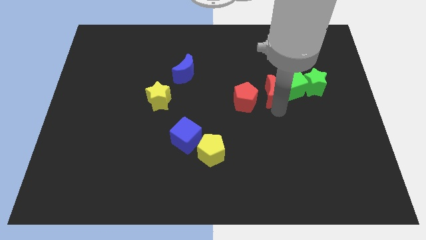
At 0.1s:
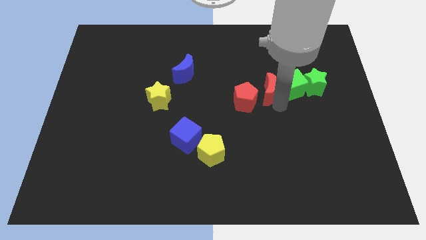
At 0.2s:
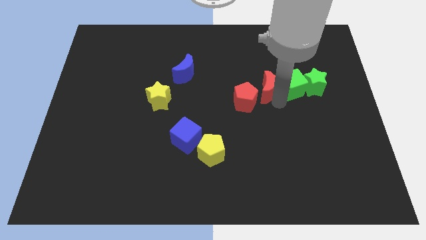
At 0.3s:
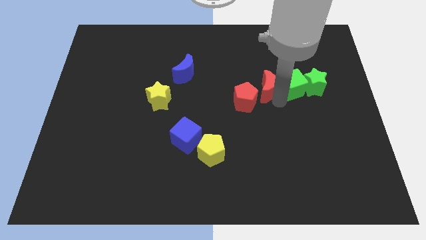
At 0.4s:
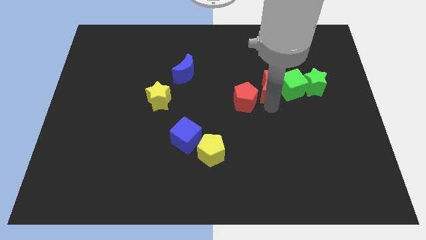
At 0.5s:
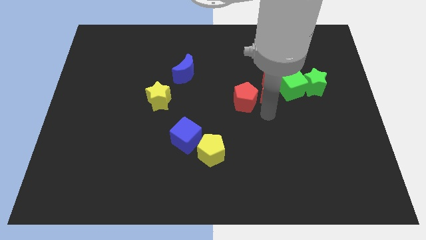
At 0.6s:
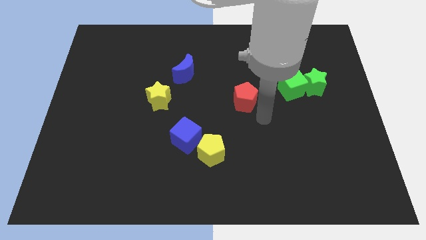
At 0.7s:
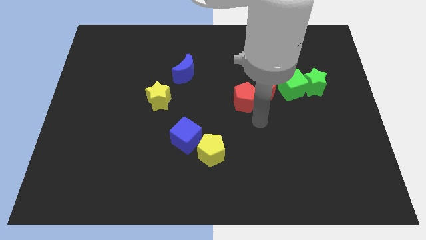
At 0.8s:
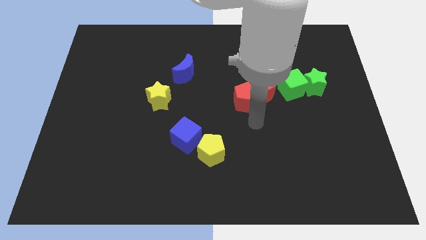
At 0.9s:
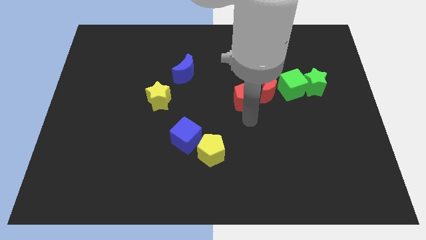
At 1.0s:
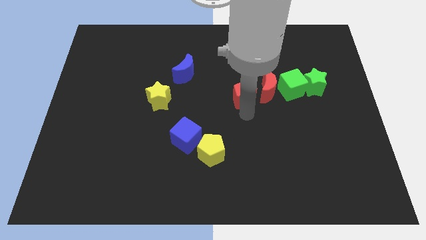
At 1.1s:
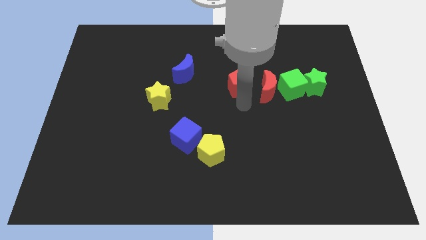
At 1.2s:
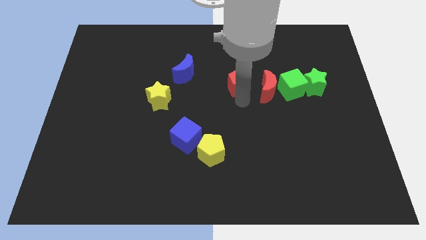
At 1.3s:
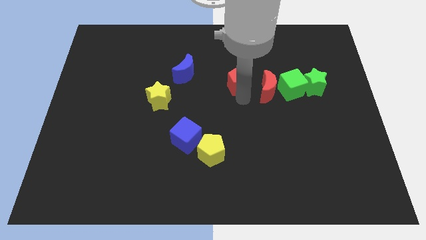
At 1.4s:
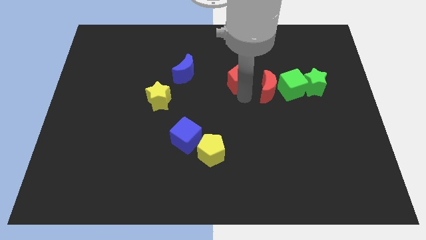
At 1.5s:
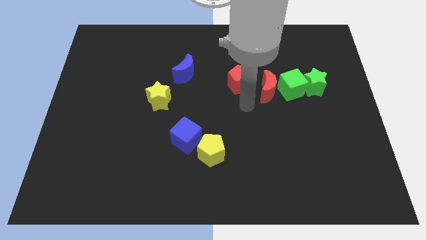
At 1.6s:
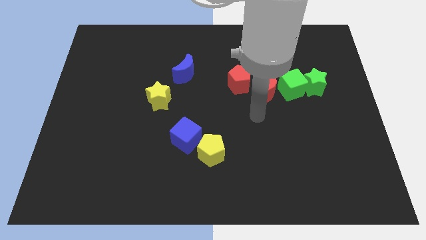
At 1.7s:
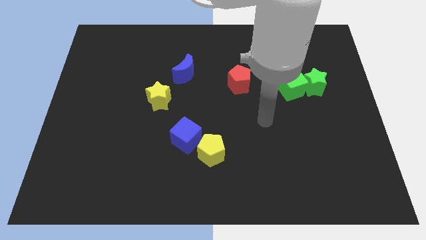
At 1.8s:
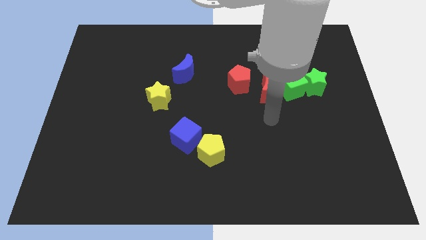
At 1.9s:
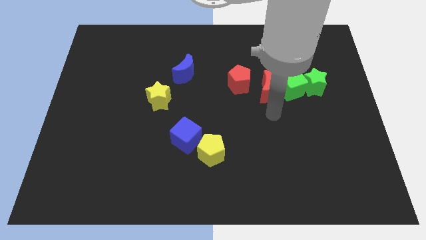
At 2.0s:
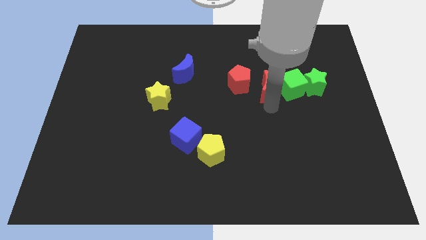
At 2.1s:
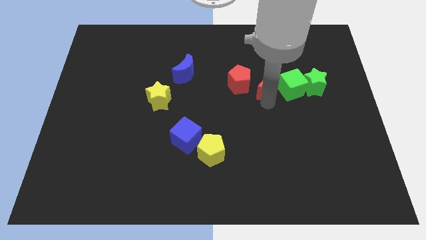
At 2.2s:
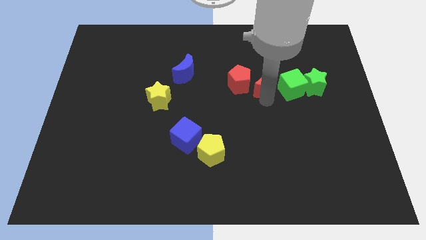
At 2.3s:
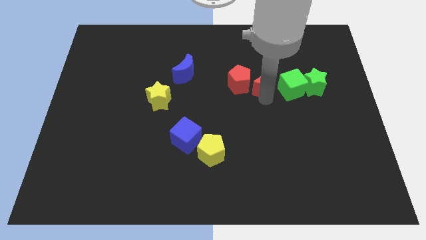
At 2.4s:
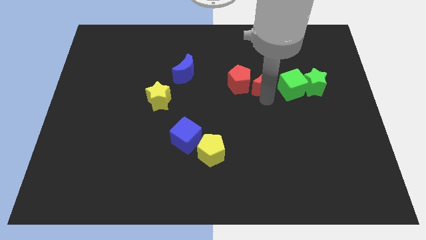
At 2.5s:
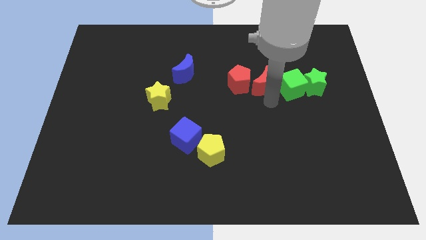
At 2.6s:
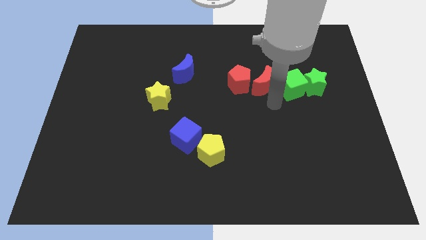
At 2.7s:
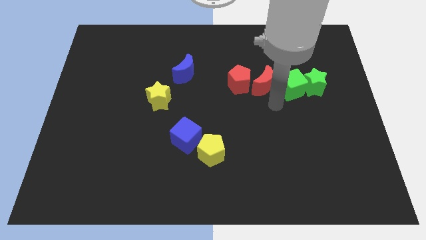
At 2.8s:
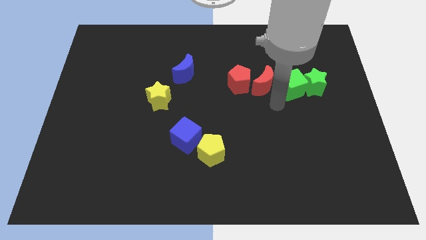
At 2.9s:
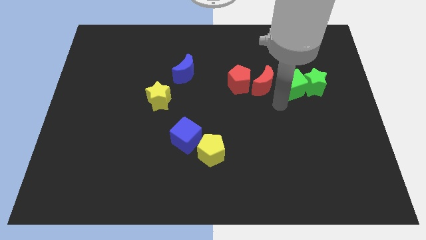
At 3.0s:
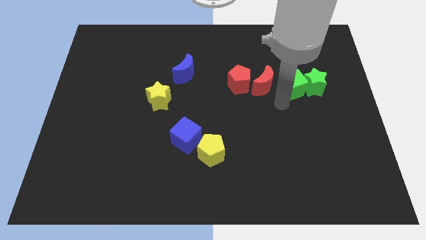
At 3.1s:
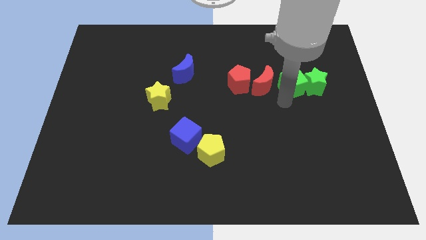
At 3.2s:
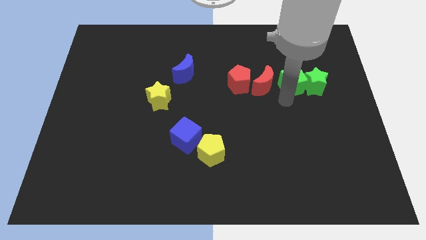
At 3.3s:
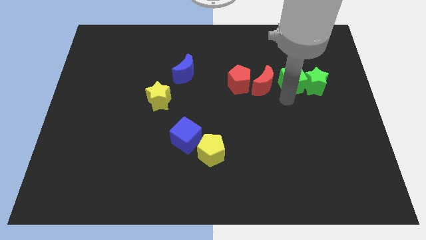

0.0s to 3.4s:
push red pentagon and red crescent to the left of green cube

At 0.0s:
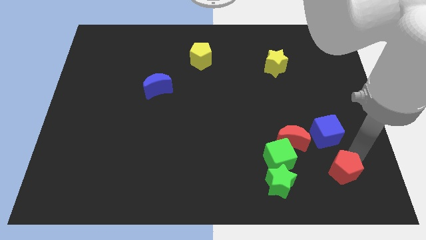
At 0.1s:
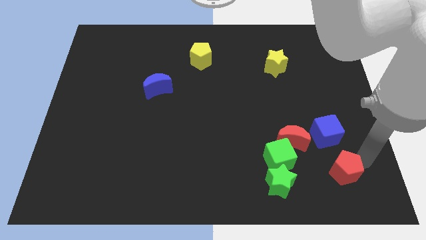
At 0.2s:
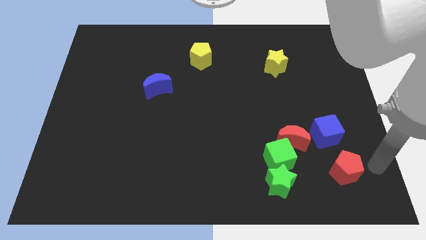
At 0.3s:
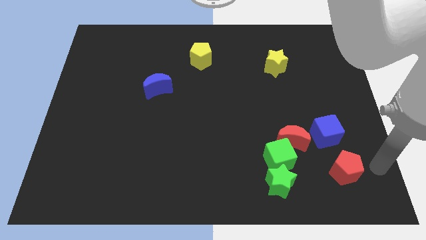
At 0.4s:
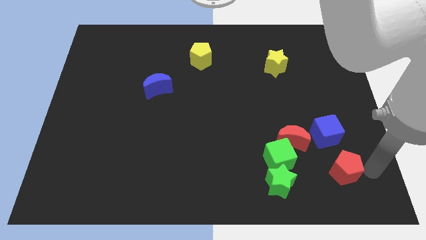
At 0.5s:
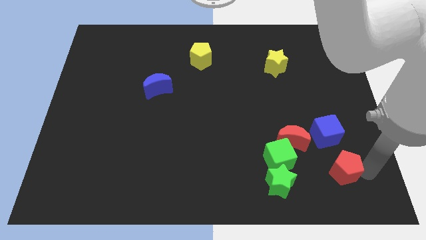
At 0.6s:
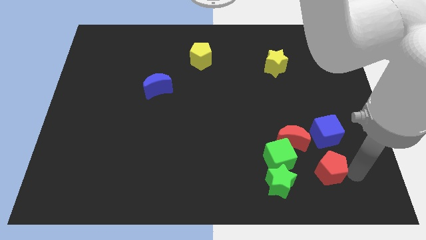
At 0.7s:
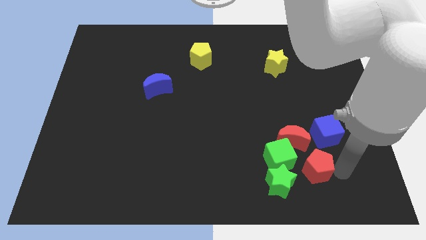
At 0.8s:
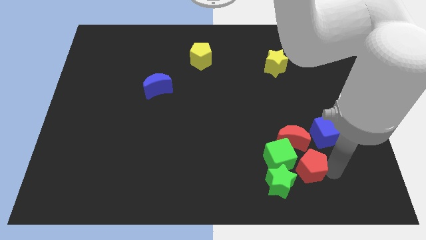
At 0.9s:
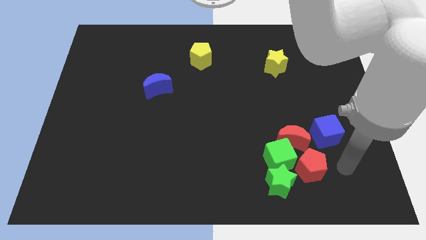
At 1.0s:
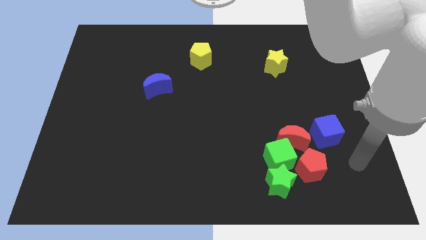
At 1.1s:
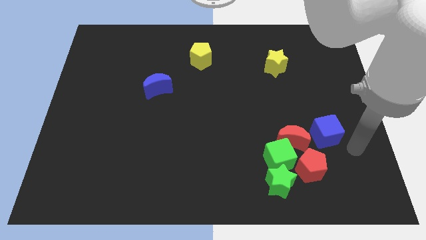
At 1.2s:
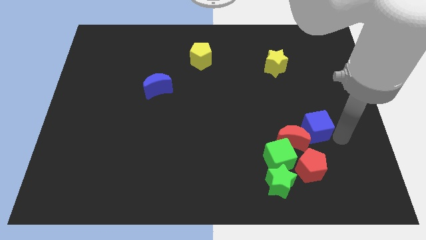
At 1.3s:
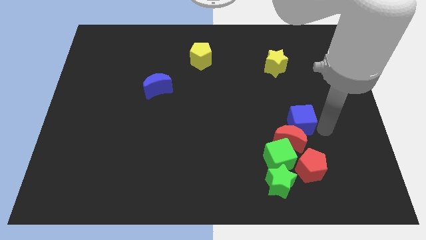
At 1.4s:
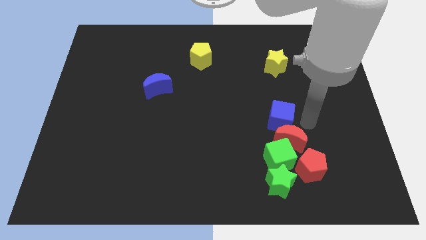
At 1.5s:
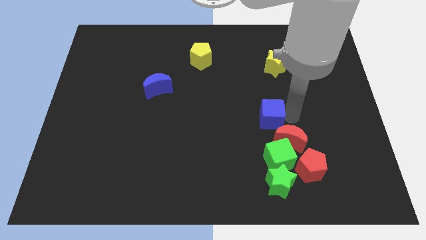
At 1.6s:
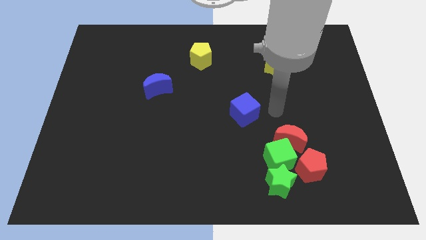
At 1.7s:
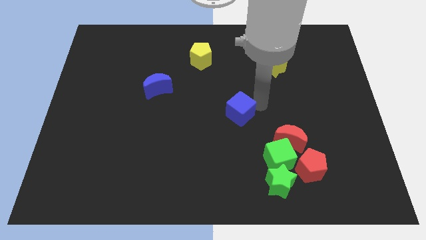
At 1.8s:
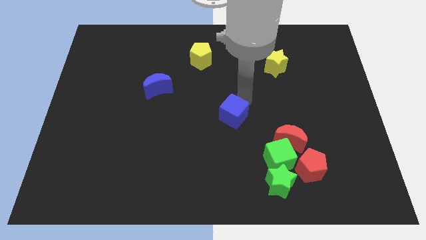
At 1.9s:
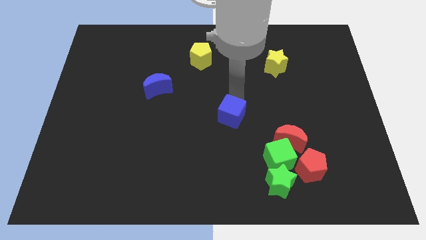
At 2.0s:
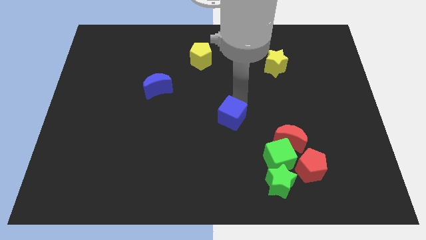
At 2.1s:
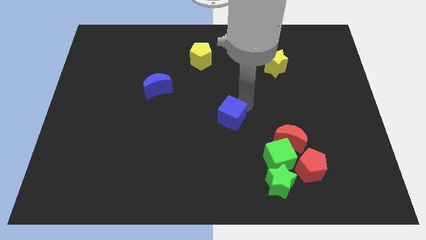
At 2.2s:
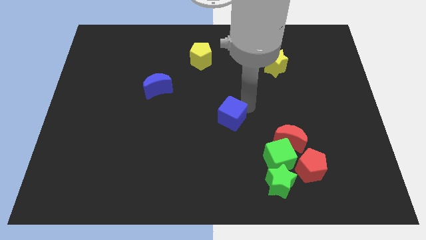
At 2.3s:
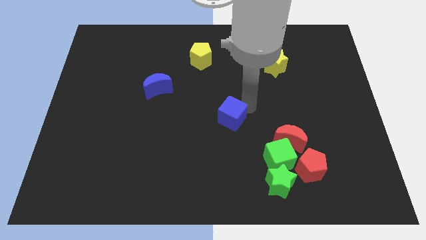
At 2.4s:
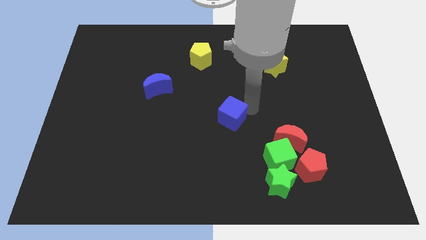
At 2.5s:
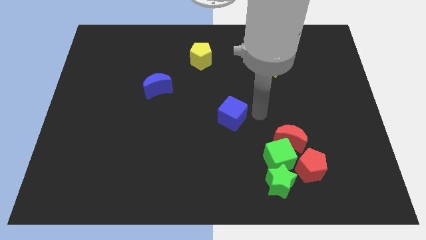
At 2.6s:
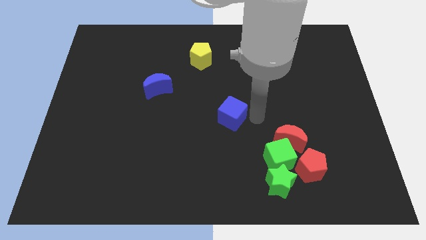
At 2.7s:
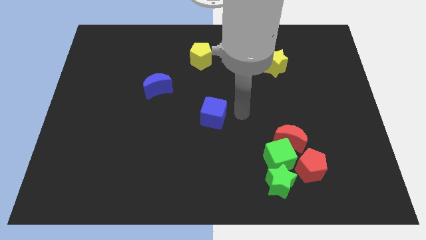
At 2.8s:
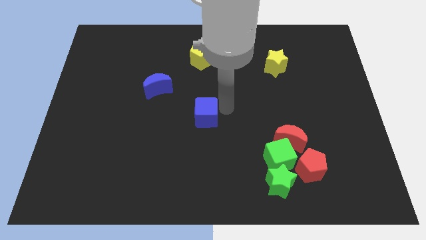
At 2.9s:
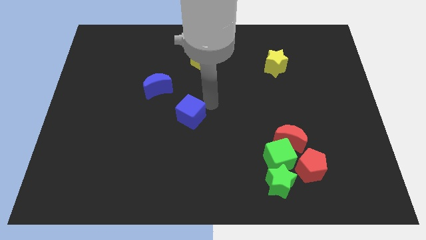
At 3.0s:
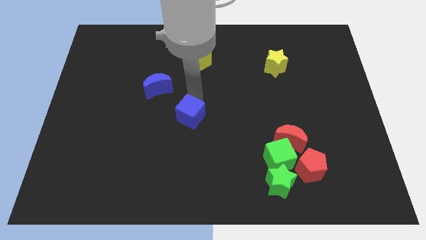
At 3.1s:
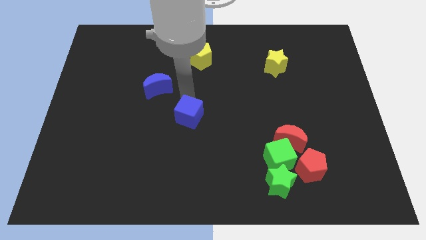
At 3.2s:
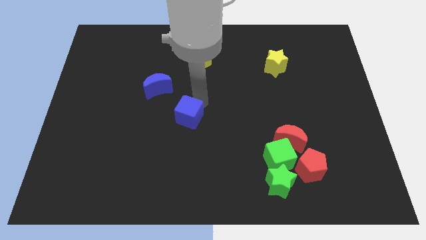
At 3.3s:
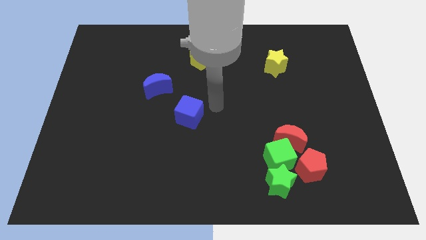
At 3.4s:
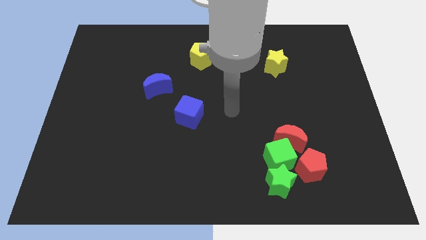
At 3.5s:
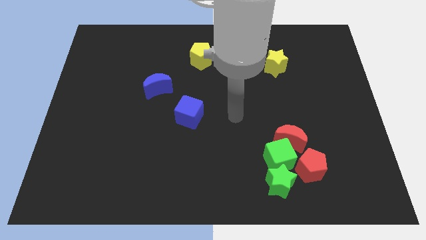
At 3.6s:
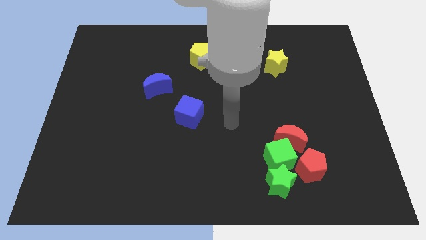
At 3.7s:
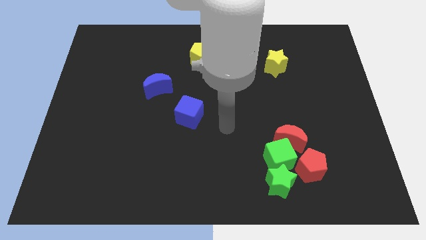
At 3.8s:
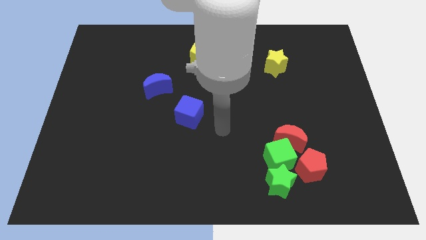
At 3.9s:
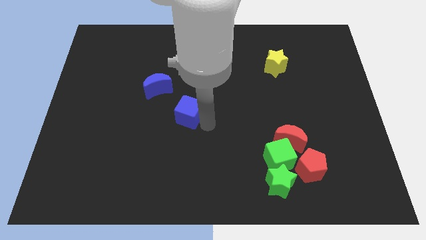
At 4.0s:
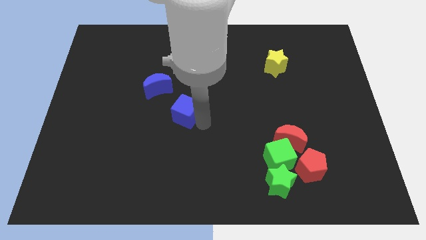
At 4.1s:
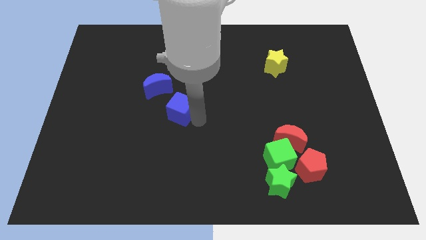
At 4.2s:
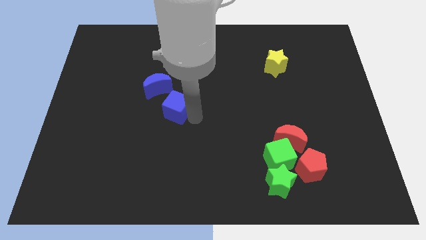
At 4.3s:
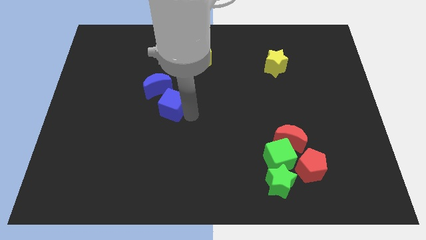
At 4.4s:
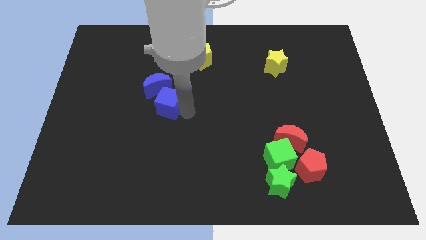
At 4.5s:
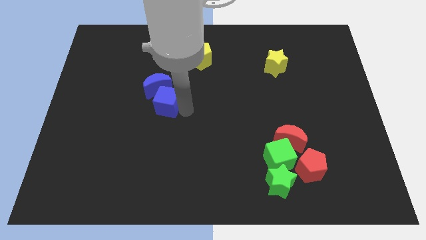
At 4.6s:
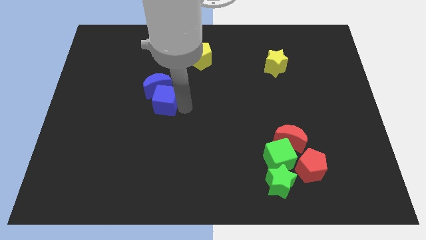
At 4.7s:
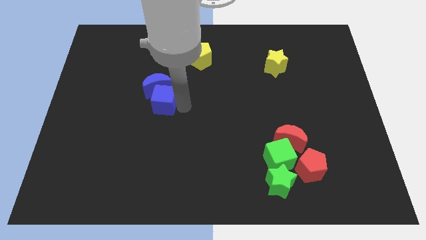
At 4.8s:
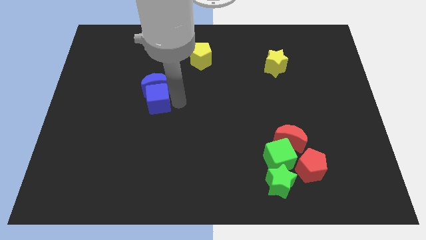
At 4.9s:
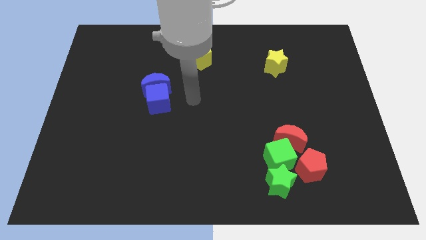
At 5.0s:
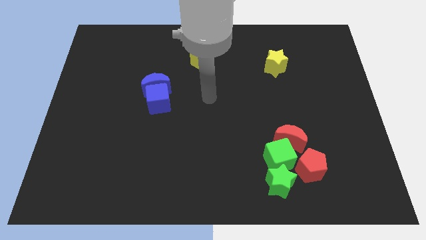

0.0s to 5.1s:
push the blue cube into the blue crescent

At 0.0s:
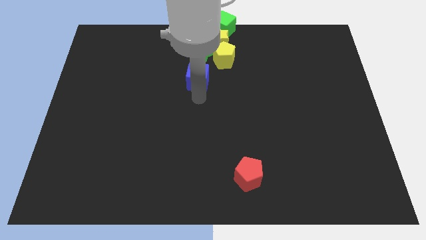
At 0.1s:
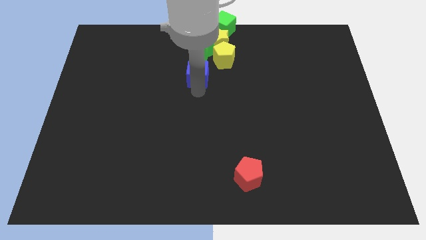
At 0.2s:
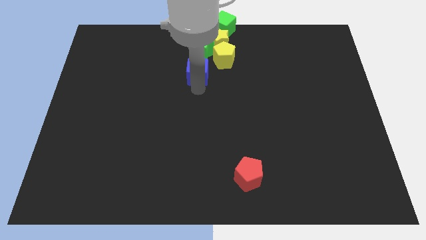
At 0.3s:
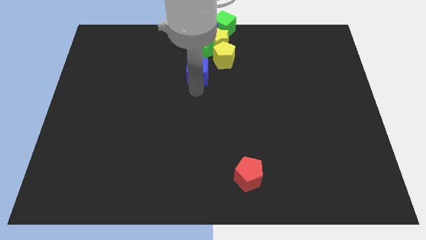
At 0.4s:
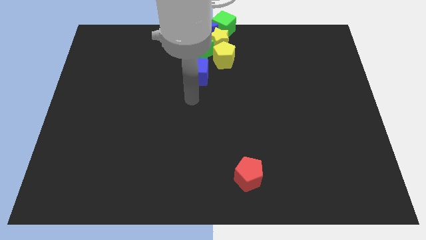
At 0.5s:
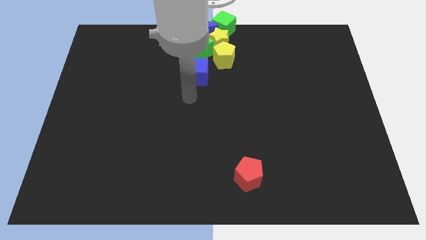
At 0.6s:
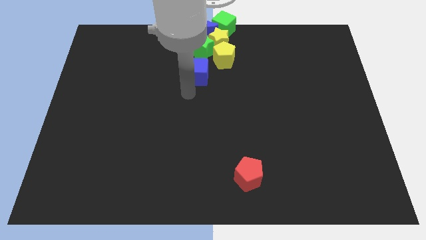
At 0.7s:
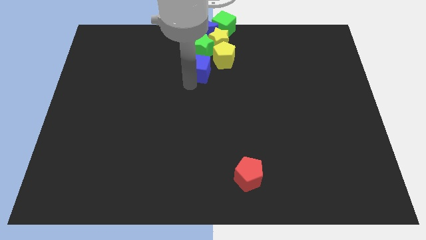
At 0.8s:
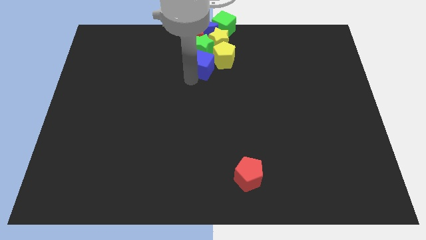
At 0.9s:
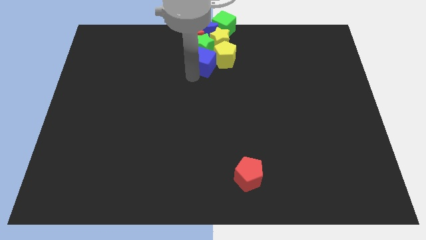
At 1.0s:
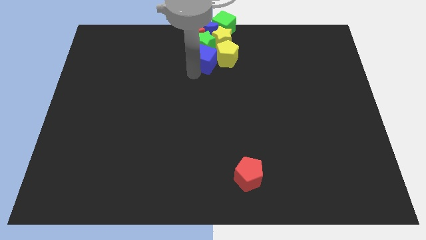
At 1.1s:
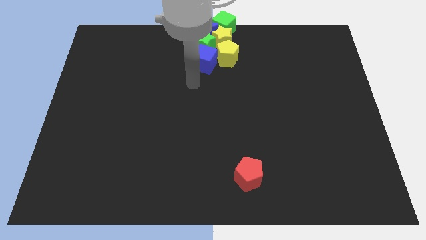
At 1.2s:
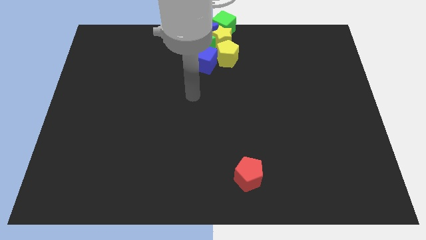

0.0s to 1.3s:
push the blue cube into the green star
